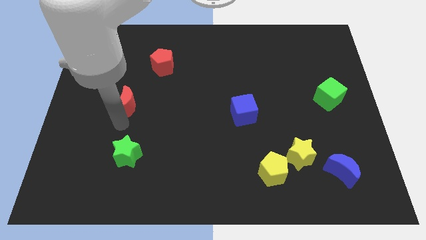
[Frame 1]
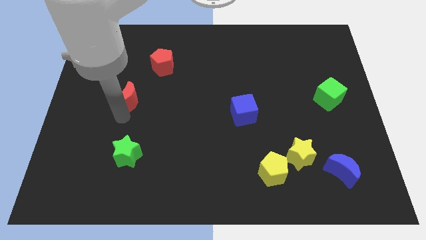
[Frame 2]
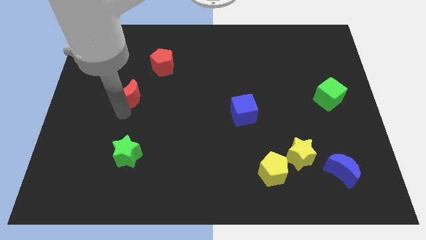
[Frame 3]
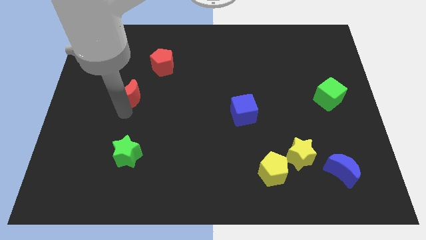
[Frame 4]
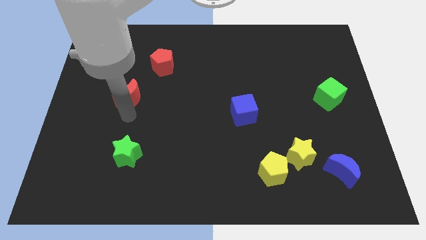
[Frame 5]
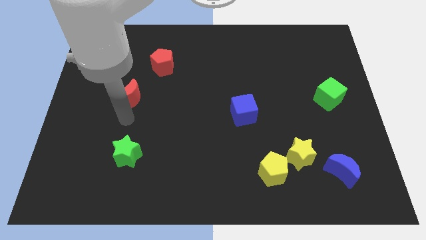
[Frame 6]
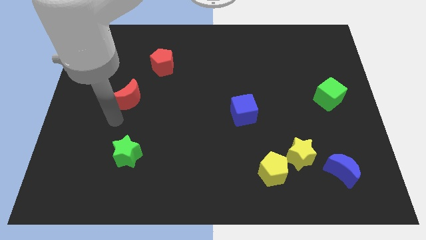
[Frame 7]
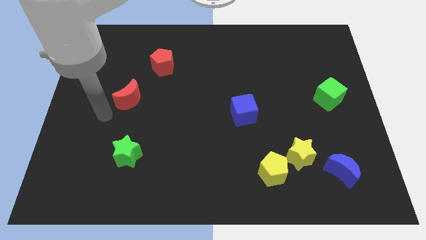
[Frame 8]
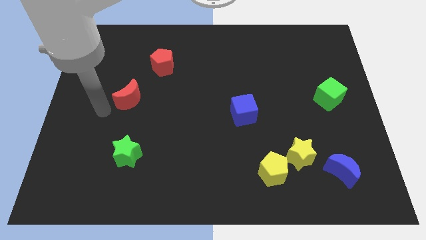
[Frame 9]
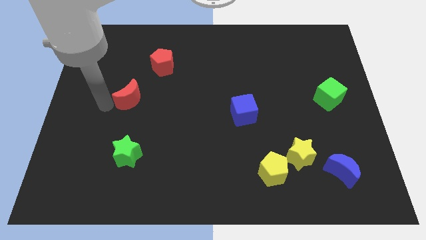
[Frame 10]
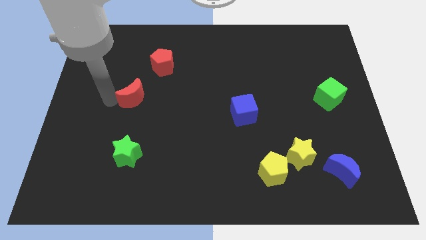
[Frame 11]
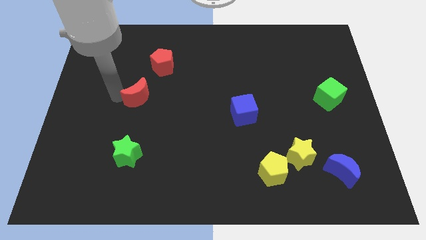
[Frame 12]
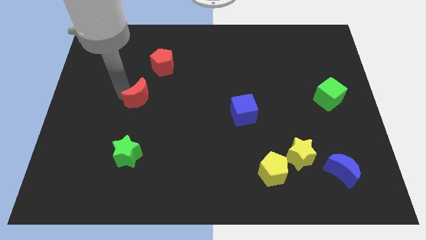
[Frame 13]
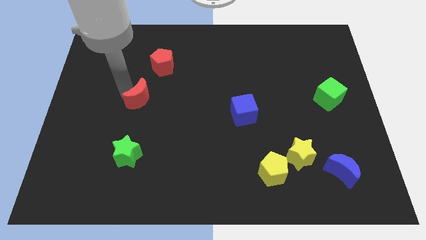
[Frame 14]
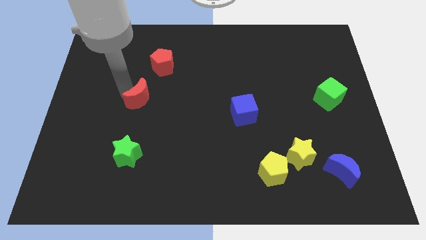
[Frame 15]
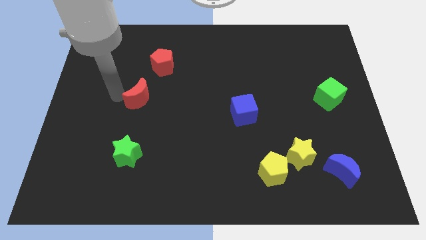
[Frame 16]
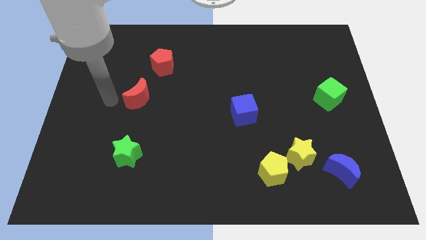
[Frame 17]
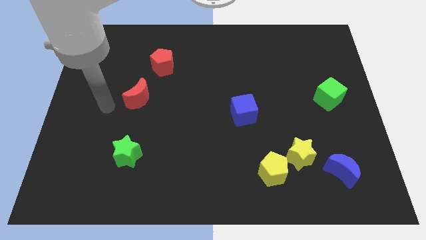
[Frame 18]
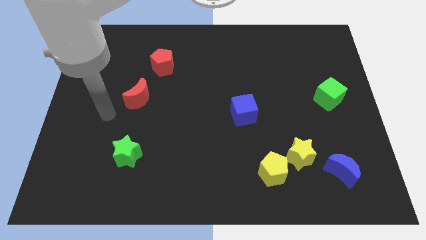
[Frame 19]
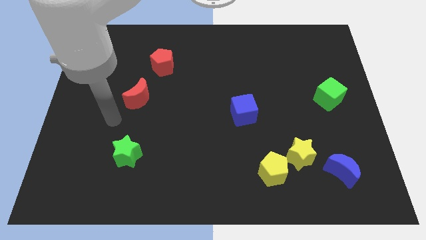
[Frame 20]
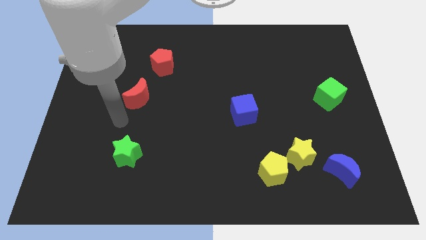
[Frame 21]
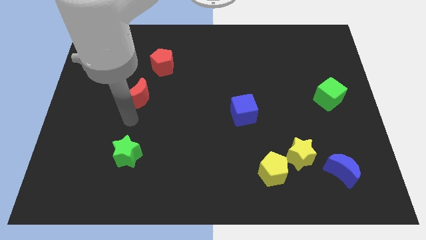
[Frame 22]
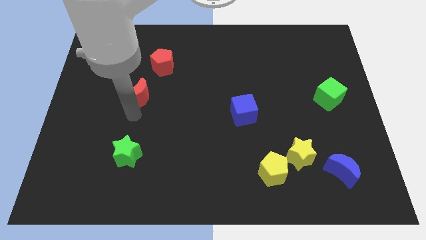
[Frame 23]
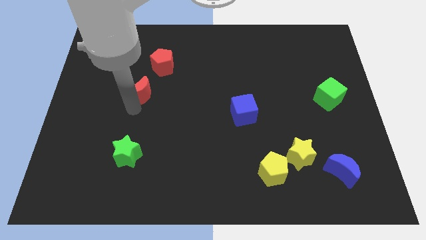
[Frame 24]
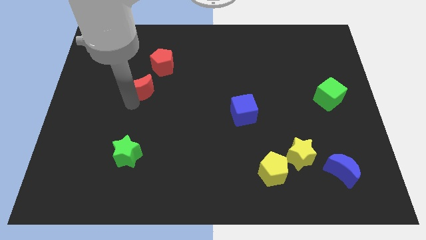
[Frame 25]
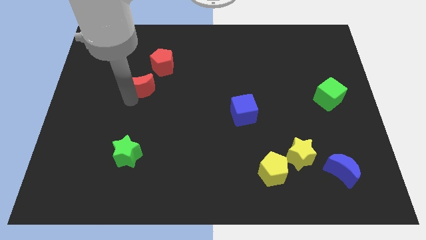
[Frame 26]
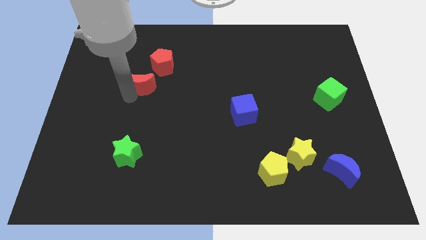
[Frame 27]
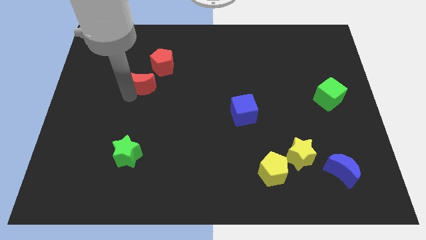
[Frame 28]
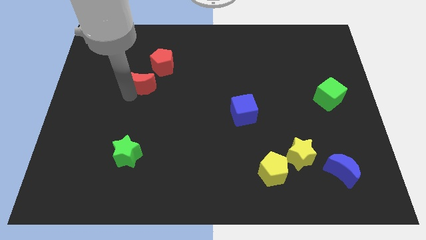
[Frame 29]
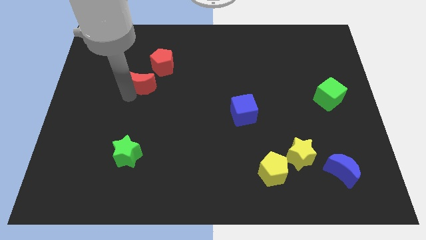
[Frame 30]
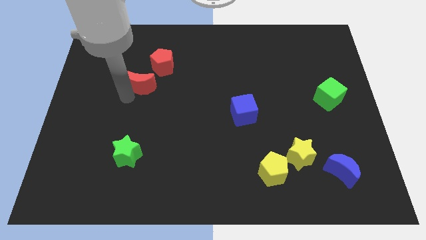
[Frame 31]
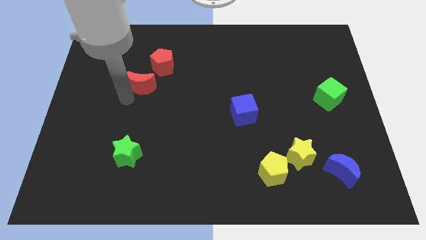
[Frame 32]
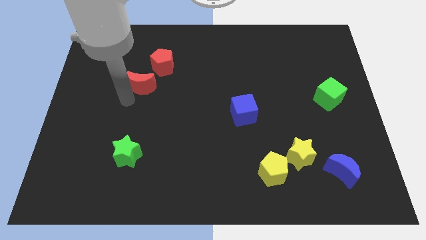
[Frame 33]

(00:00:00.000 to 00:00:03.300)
move the red crescent towards red pentagon

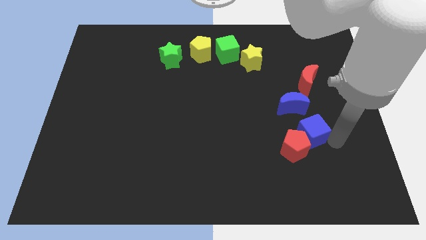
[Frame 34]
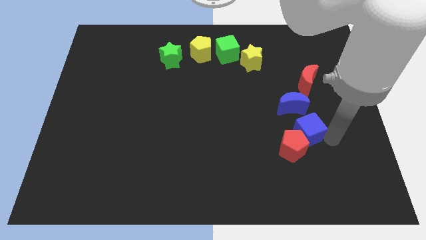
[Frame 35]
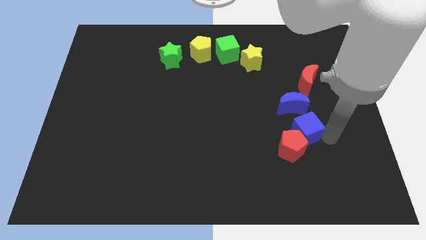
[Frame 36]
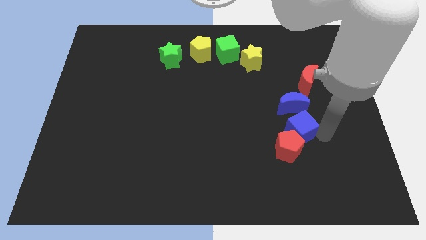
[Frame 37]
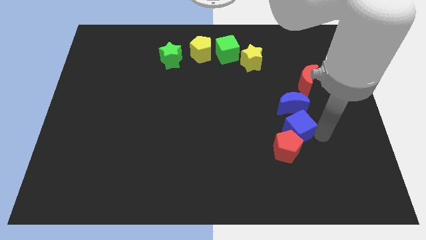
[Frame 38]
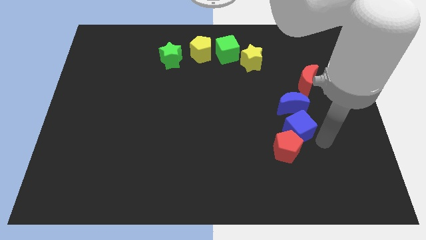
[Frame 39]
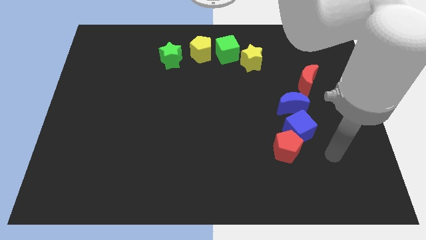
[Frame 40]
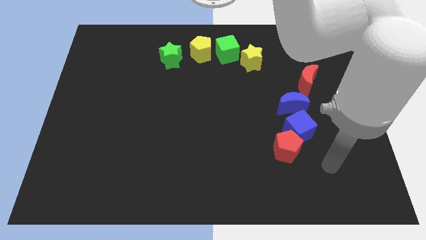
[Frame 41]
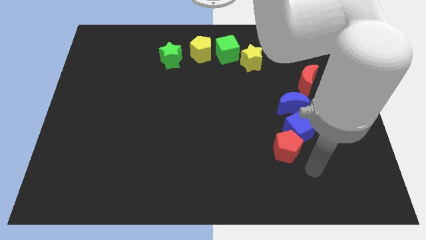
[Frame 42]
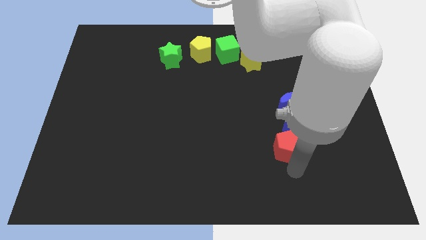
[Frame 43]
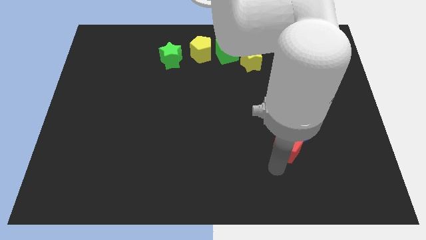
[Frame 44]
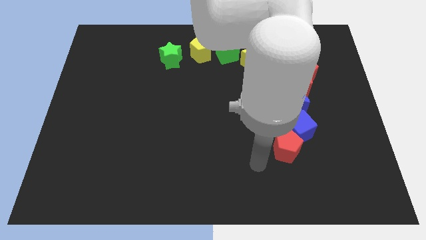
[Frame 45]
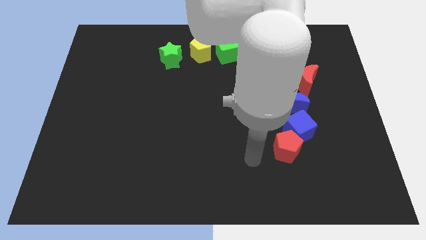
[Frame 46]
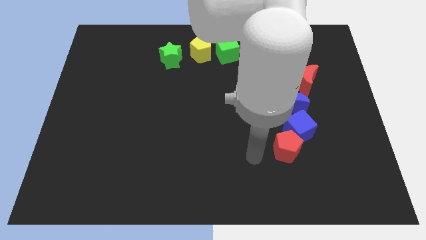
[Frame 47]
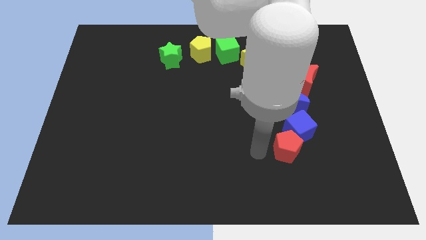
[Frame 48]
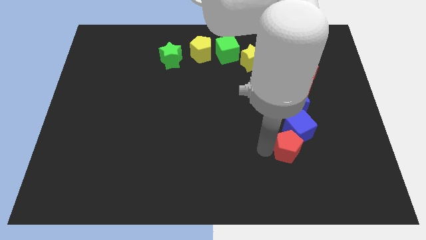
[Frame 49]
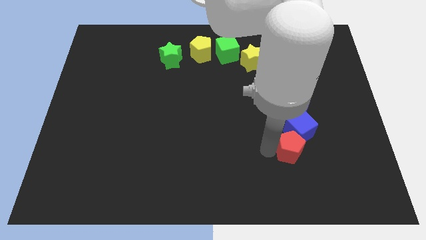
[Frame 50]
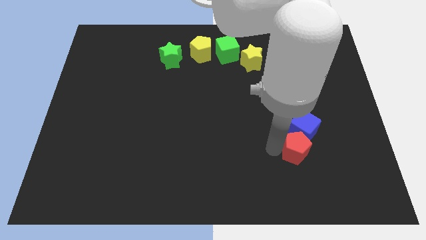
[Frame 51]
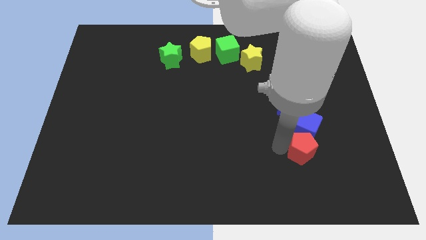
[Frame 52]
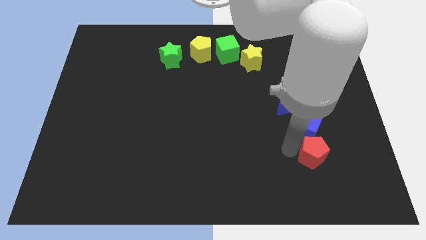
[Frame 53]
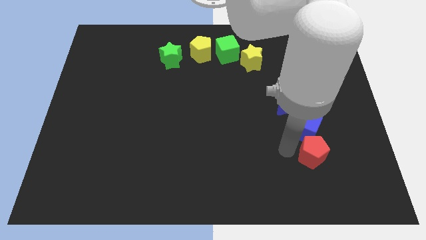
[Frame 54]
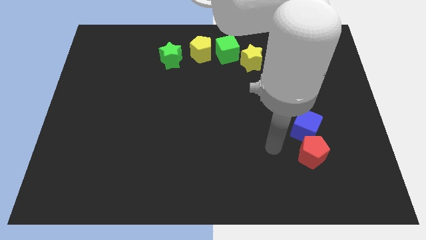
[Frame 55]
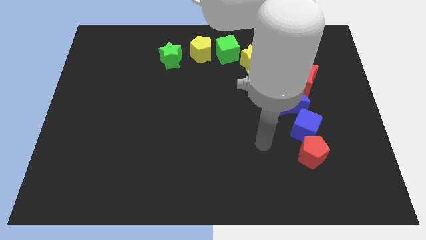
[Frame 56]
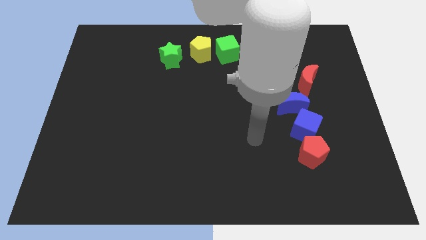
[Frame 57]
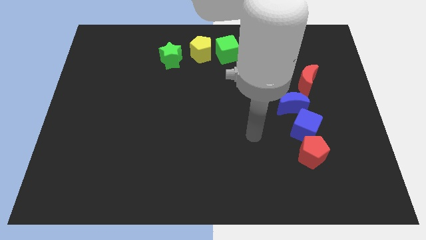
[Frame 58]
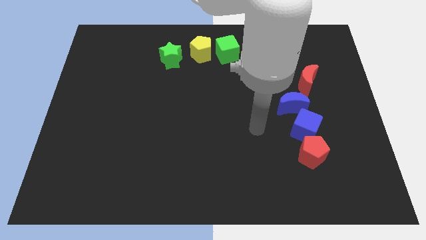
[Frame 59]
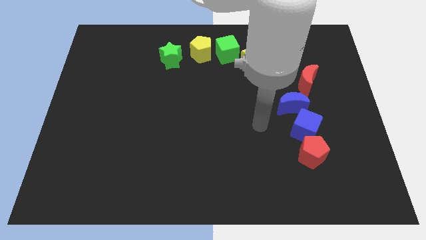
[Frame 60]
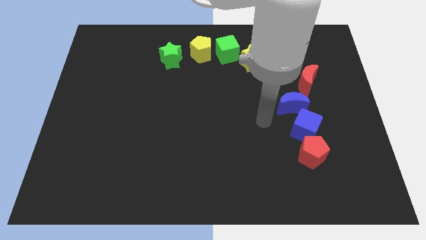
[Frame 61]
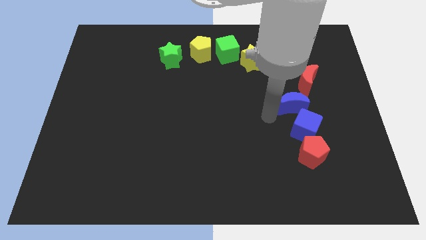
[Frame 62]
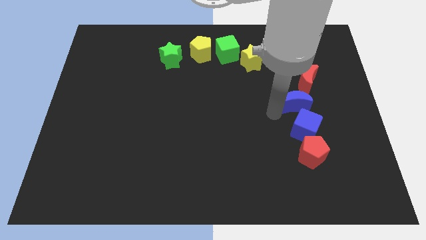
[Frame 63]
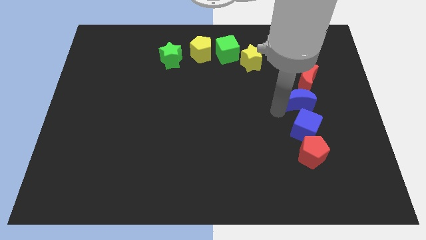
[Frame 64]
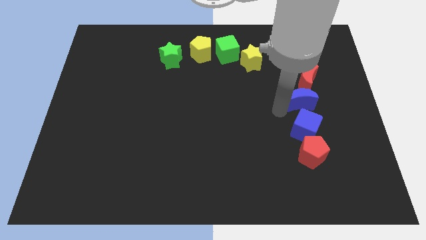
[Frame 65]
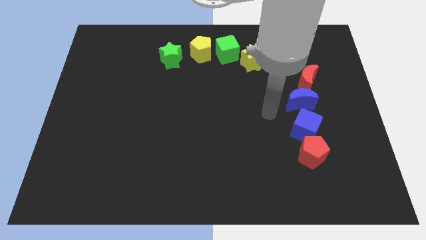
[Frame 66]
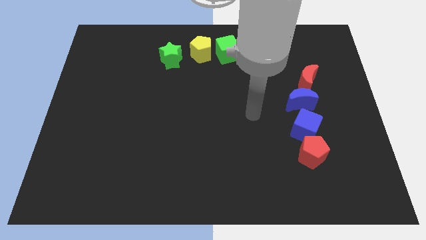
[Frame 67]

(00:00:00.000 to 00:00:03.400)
adjust the blocks to form a vertical line

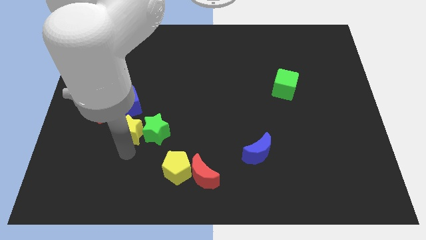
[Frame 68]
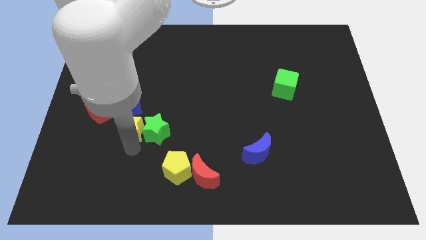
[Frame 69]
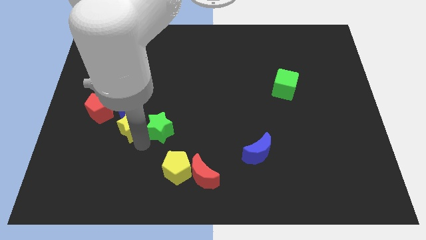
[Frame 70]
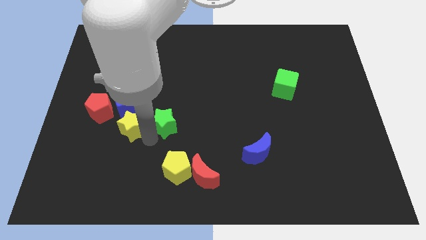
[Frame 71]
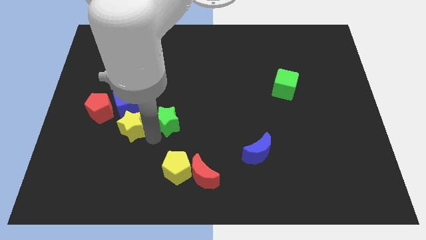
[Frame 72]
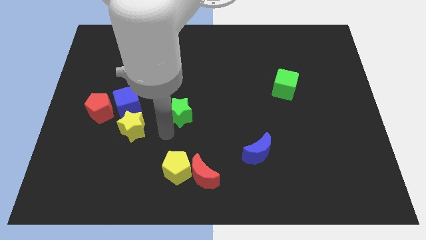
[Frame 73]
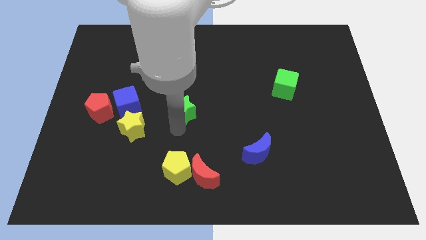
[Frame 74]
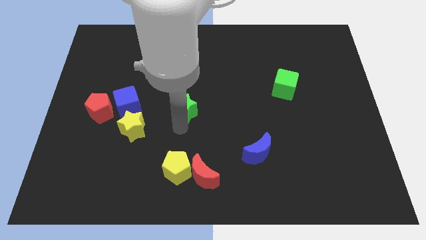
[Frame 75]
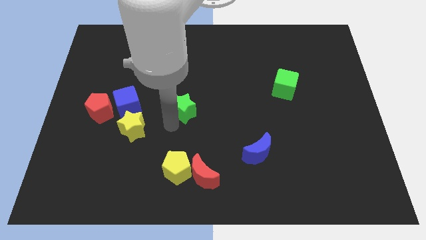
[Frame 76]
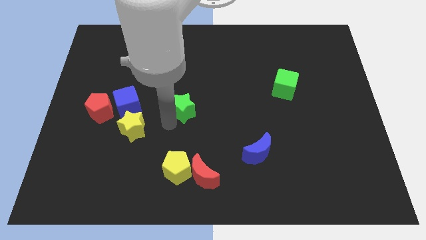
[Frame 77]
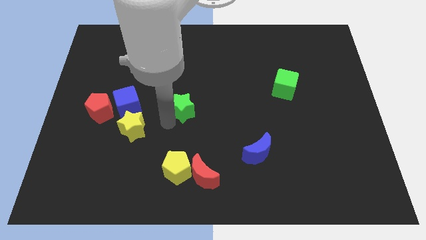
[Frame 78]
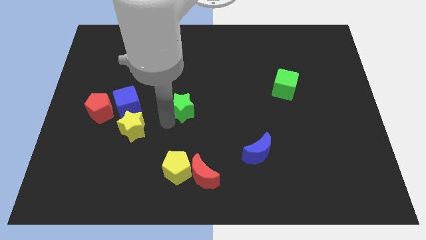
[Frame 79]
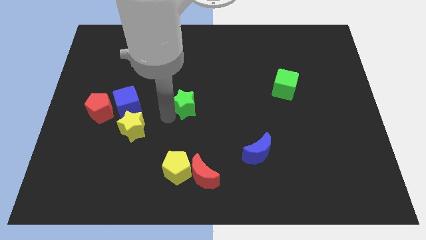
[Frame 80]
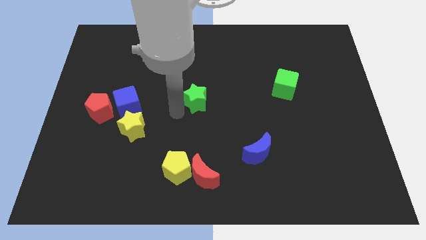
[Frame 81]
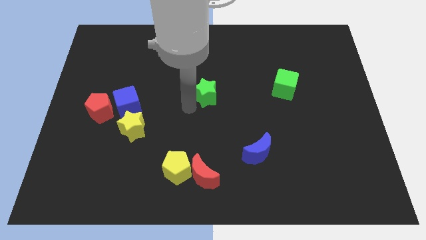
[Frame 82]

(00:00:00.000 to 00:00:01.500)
push the green star to the center of the board

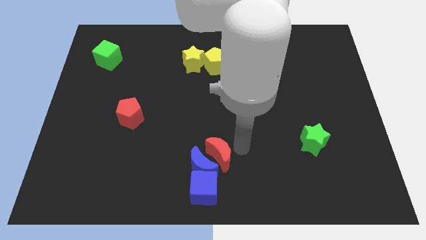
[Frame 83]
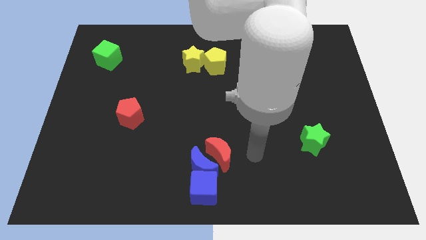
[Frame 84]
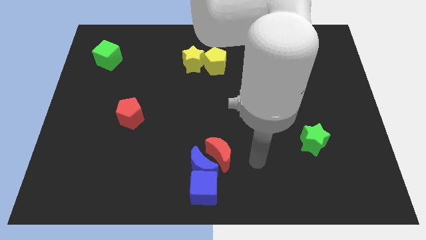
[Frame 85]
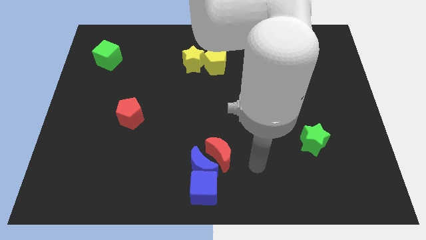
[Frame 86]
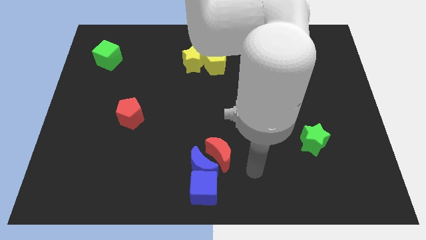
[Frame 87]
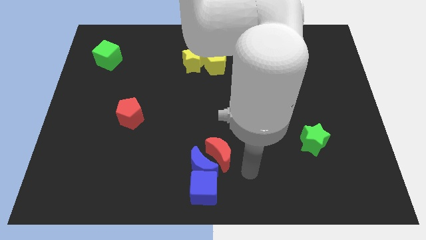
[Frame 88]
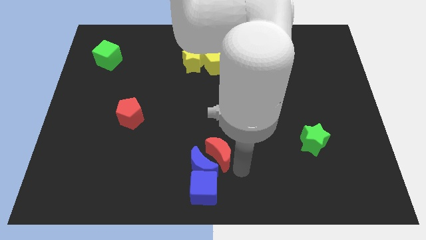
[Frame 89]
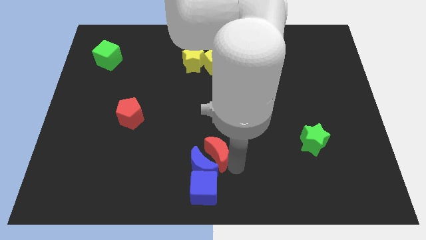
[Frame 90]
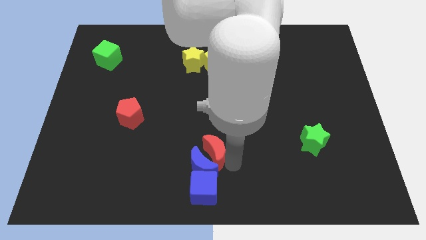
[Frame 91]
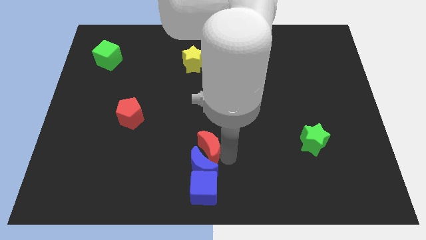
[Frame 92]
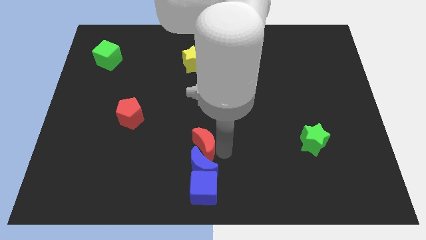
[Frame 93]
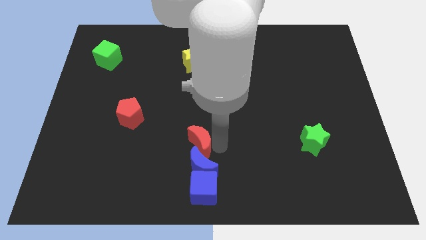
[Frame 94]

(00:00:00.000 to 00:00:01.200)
push red moon above blue moon
